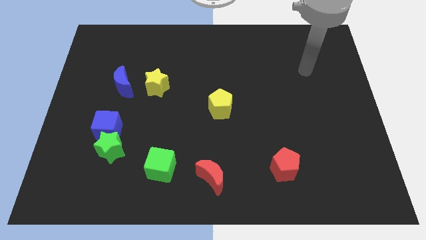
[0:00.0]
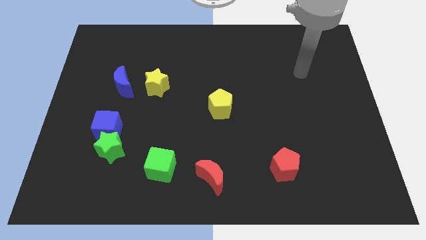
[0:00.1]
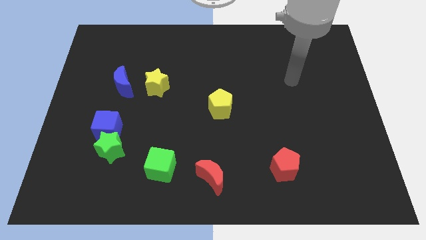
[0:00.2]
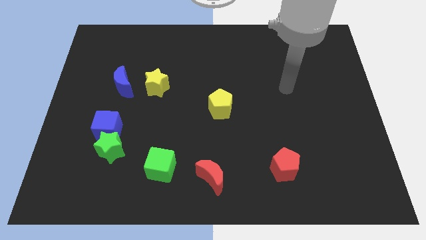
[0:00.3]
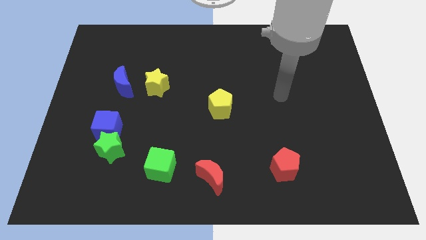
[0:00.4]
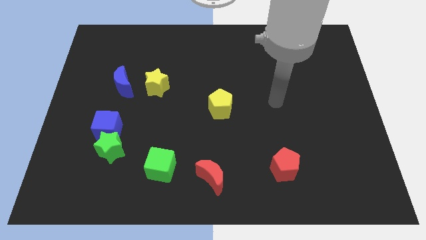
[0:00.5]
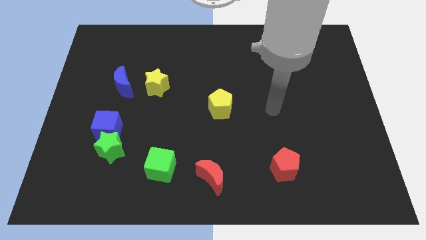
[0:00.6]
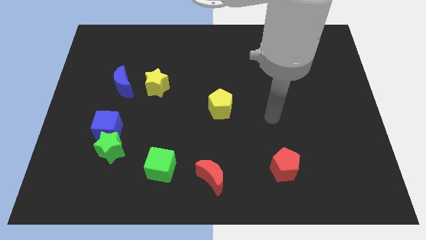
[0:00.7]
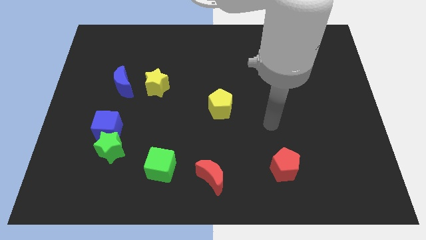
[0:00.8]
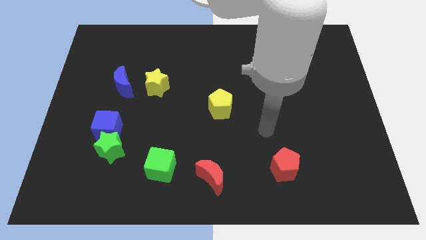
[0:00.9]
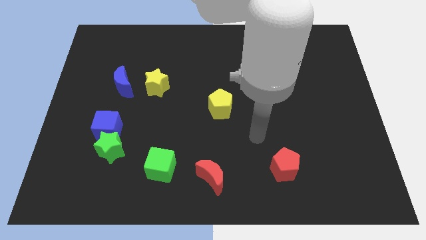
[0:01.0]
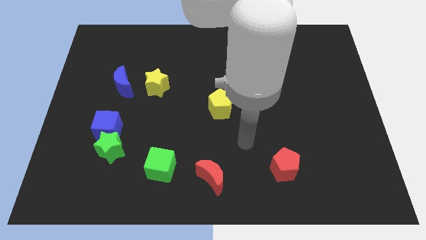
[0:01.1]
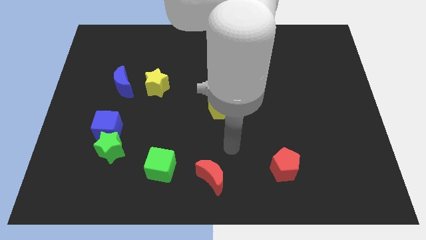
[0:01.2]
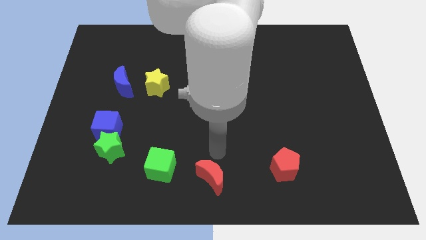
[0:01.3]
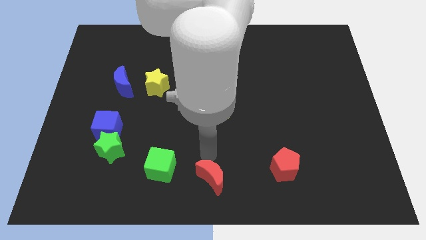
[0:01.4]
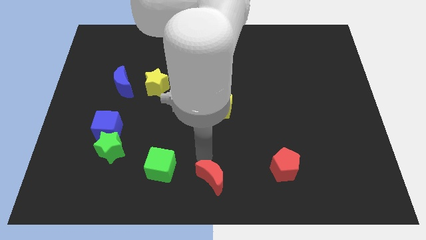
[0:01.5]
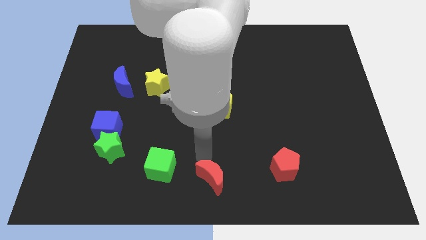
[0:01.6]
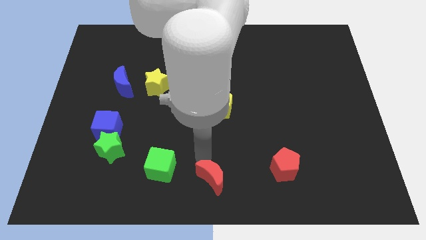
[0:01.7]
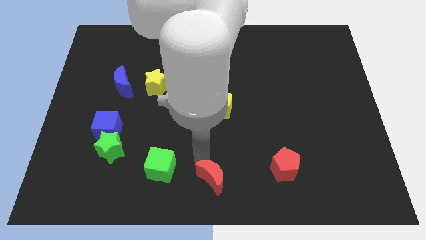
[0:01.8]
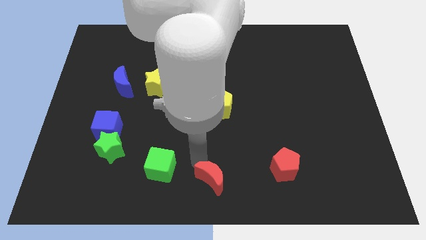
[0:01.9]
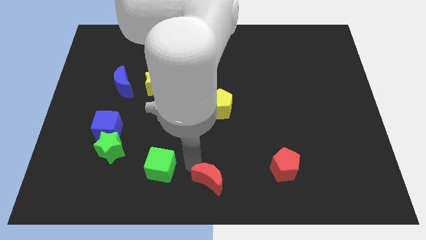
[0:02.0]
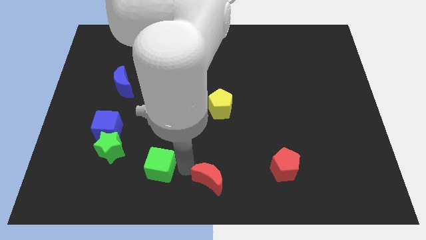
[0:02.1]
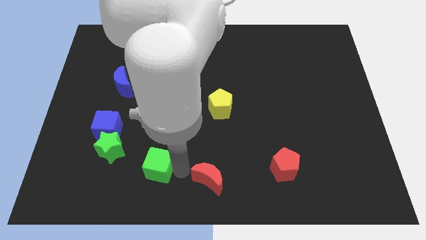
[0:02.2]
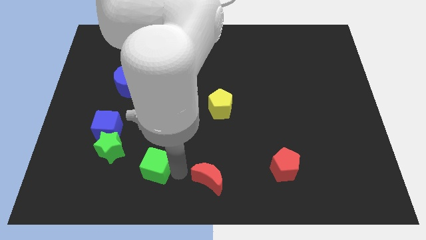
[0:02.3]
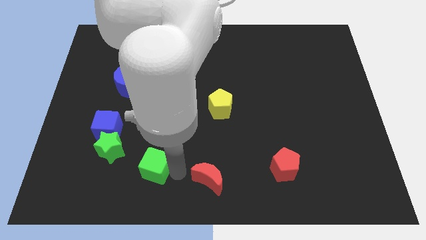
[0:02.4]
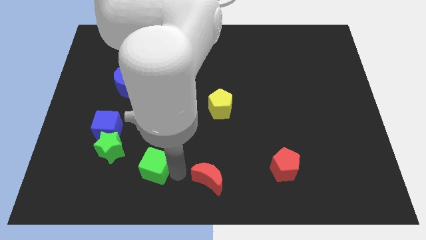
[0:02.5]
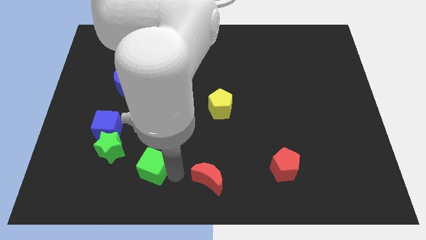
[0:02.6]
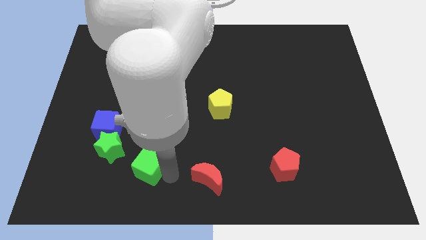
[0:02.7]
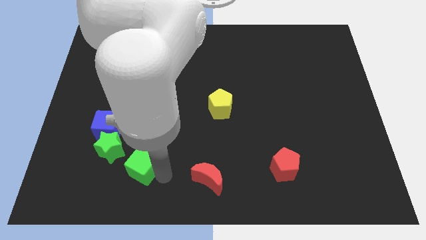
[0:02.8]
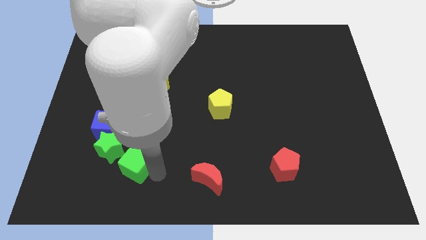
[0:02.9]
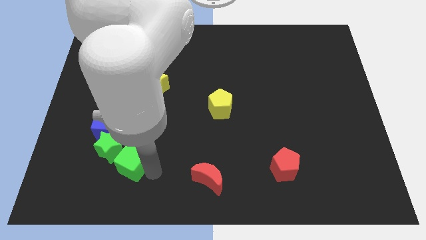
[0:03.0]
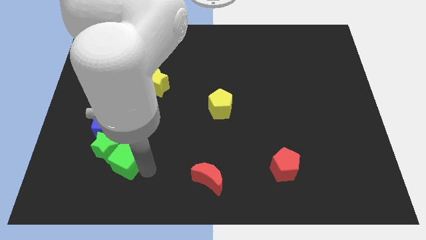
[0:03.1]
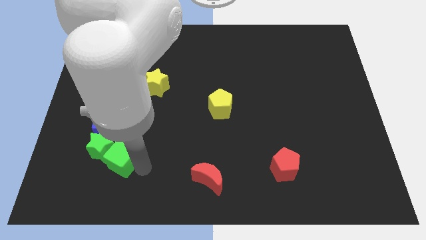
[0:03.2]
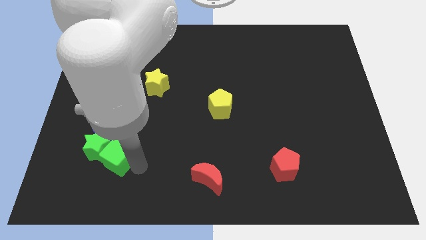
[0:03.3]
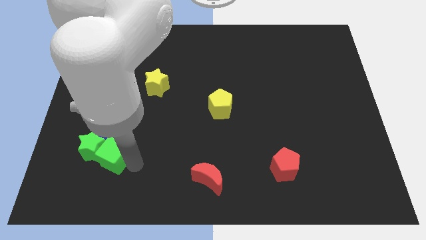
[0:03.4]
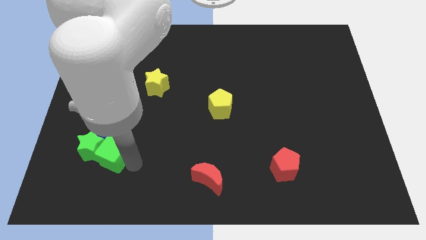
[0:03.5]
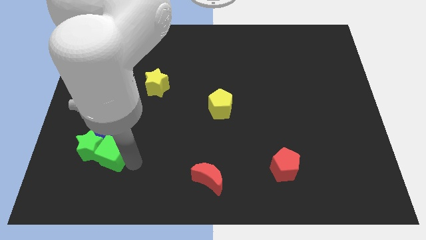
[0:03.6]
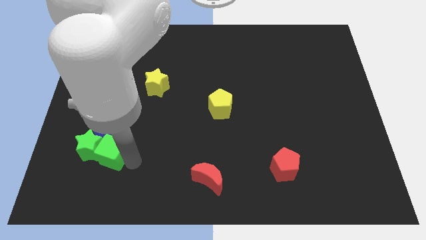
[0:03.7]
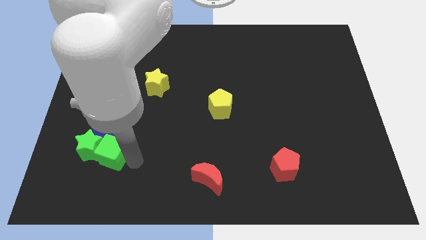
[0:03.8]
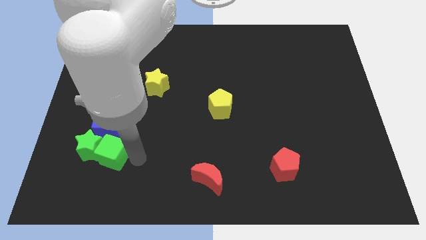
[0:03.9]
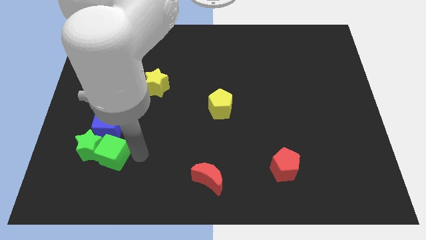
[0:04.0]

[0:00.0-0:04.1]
move green cube into the green star

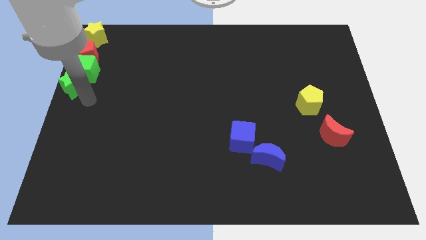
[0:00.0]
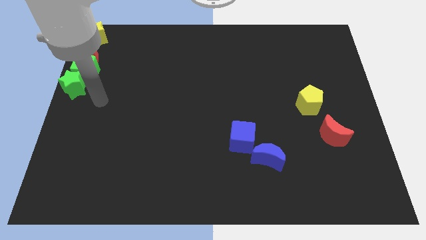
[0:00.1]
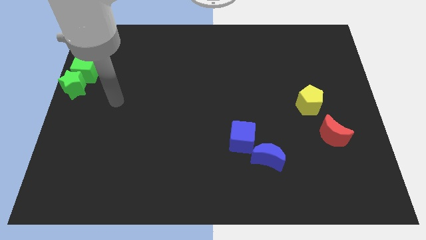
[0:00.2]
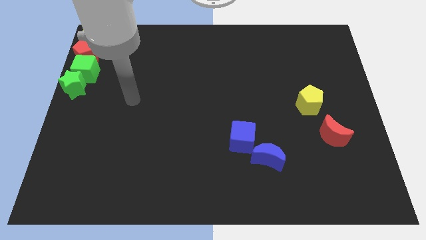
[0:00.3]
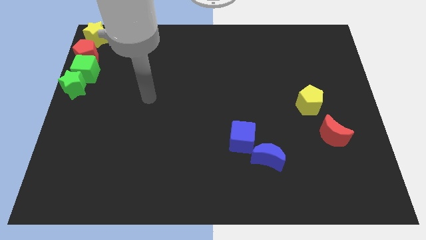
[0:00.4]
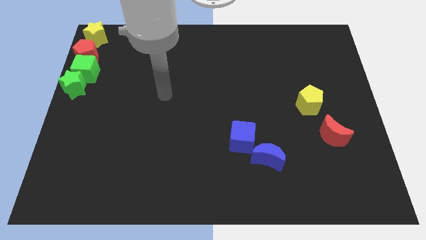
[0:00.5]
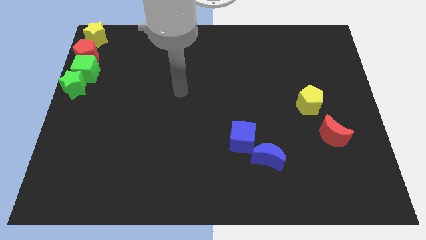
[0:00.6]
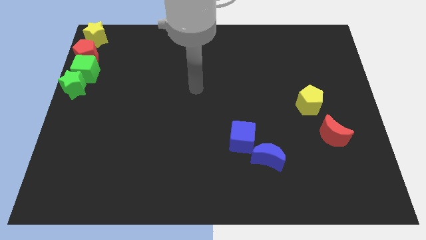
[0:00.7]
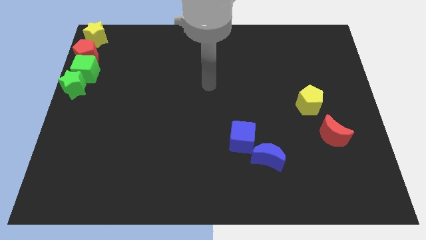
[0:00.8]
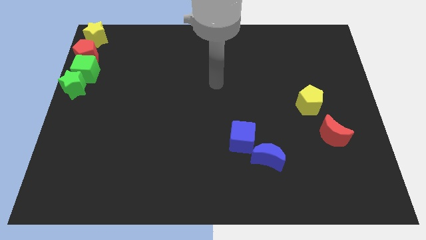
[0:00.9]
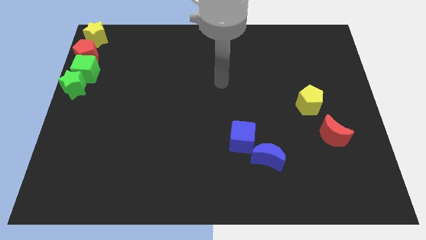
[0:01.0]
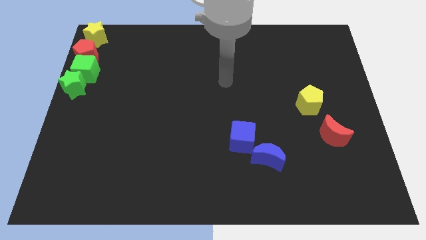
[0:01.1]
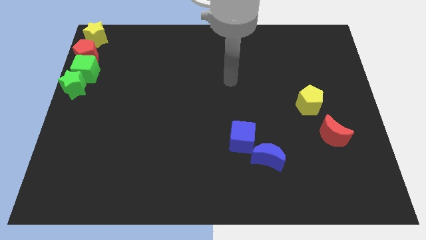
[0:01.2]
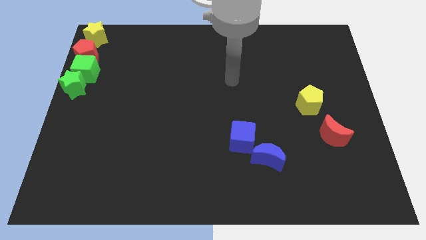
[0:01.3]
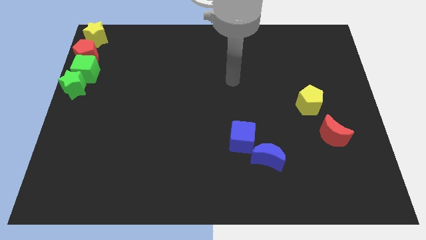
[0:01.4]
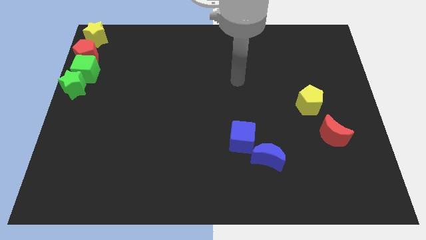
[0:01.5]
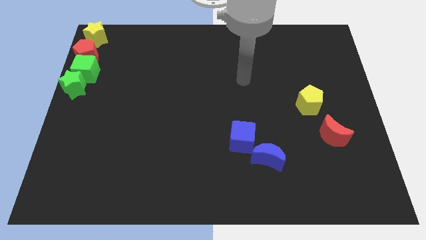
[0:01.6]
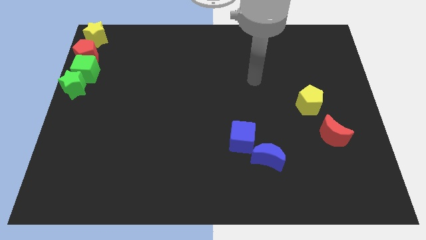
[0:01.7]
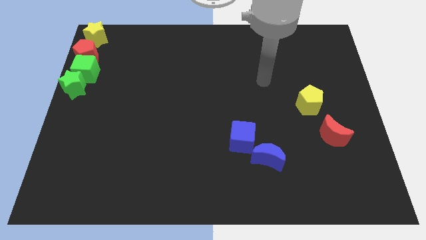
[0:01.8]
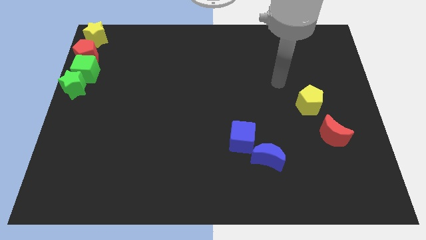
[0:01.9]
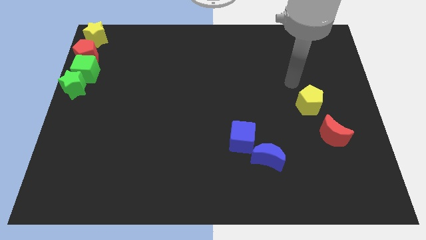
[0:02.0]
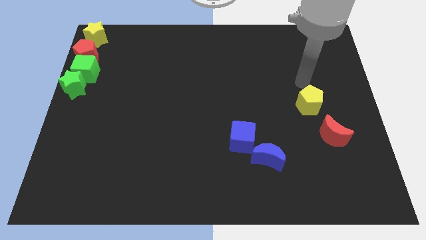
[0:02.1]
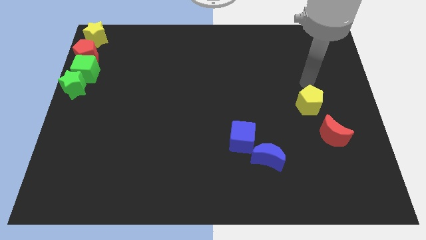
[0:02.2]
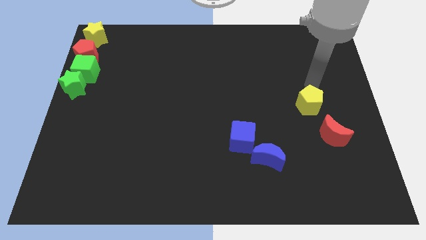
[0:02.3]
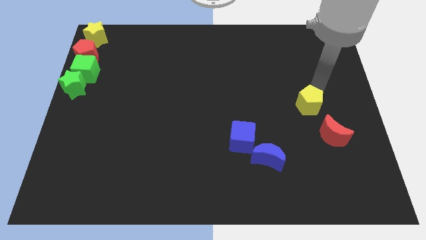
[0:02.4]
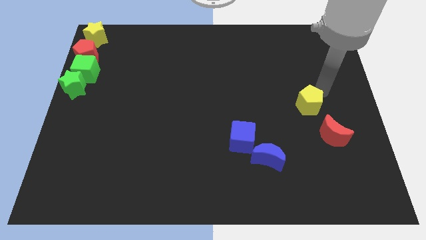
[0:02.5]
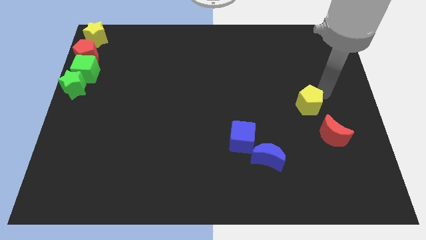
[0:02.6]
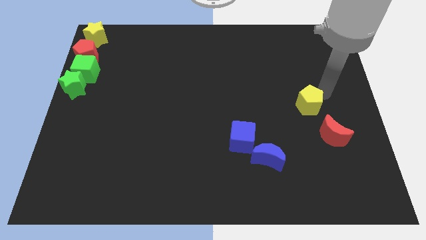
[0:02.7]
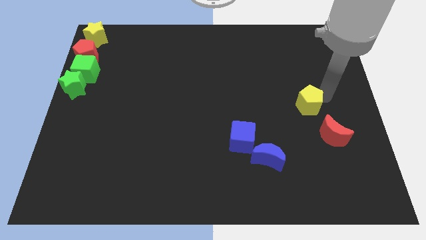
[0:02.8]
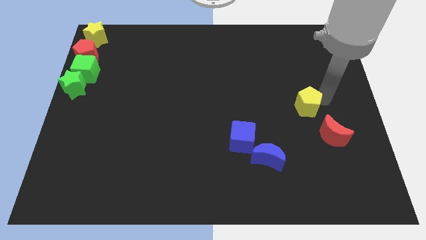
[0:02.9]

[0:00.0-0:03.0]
point our arm to the right side of yellow pentagon

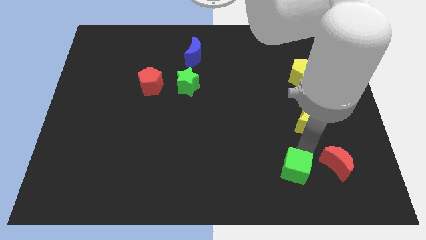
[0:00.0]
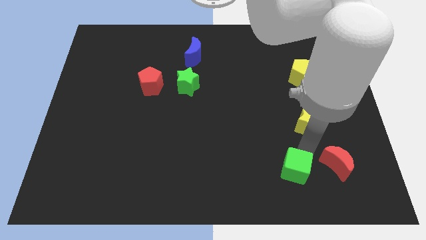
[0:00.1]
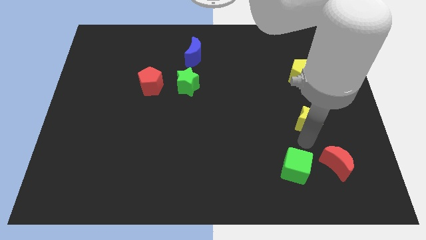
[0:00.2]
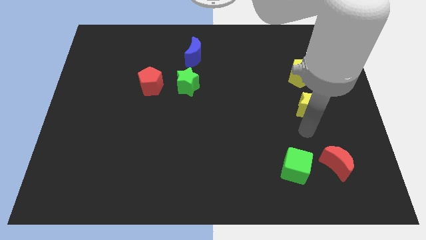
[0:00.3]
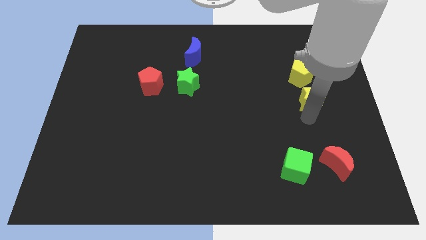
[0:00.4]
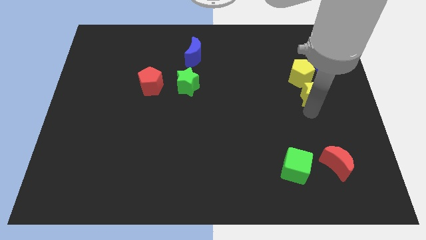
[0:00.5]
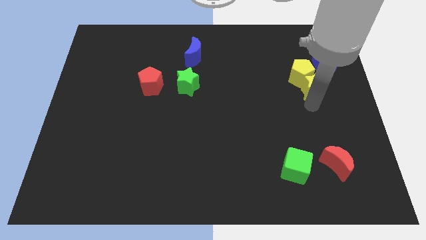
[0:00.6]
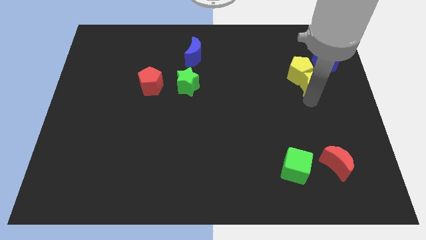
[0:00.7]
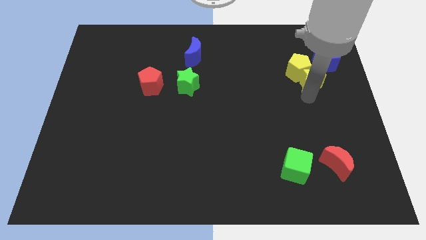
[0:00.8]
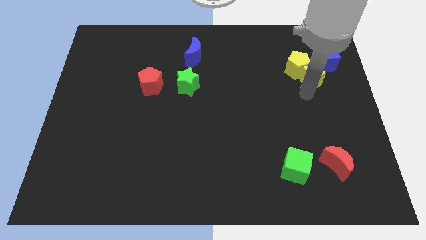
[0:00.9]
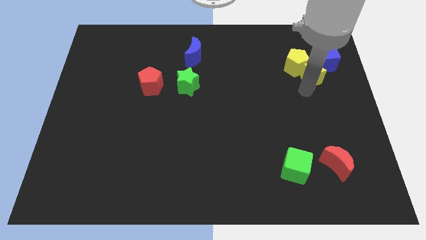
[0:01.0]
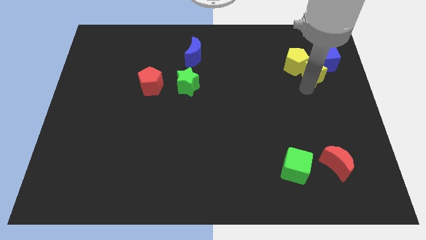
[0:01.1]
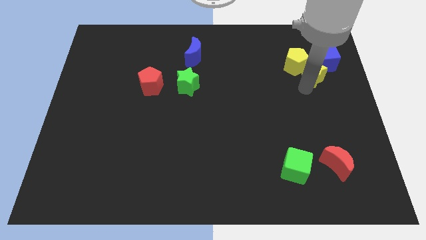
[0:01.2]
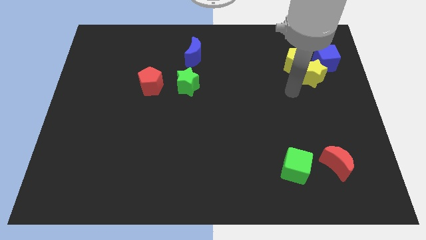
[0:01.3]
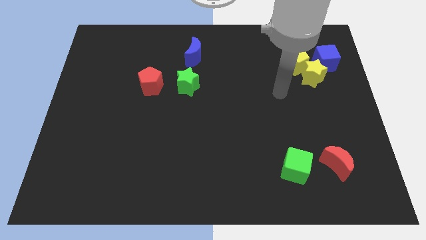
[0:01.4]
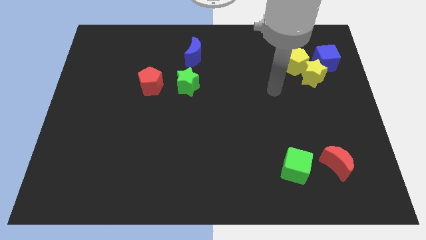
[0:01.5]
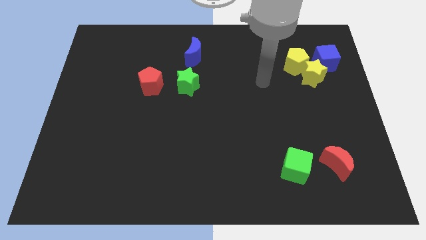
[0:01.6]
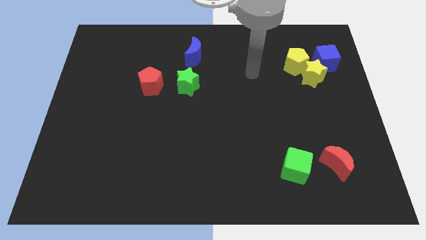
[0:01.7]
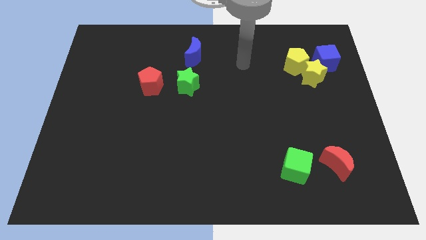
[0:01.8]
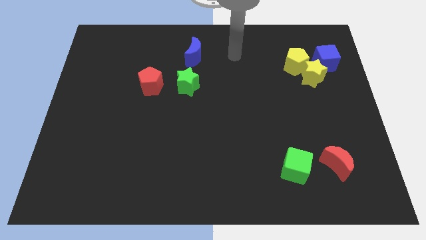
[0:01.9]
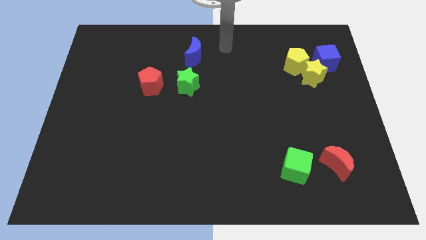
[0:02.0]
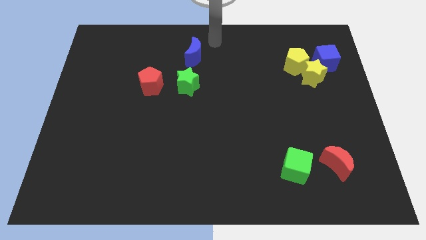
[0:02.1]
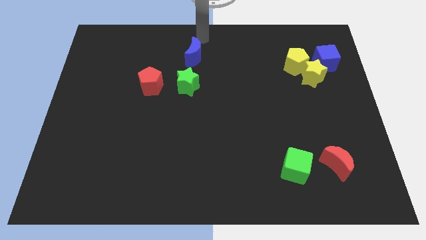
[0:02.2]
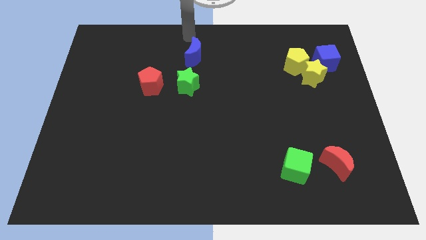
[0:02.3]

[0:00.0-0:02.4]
push the yellow star into the yellow pentagon
